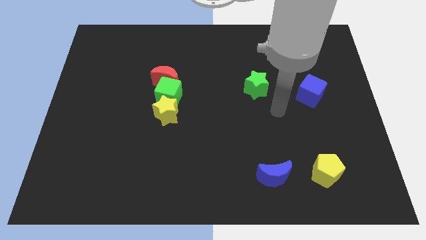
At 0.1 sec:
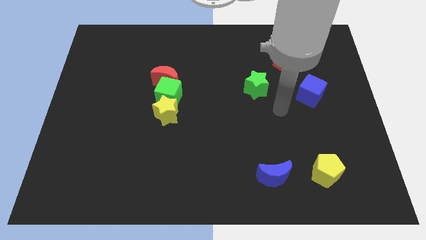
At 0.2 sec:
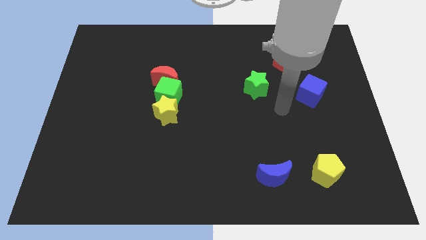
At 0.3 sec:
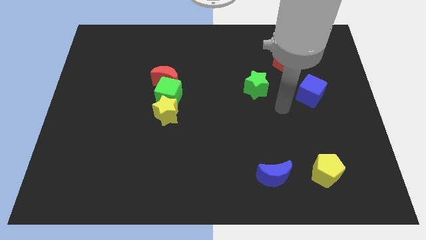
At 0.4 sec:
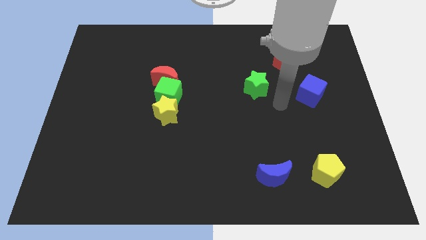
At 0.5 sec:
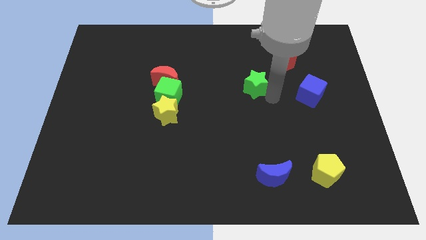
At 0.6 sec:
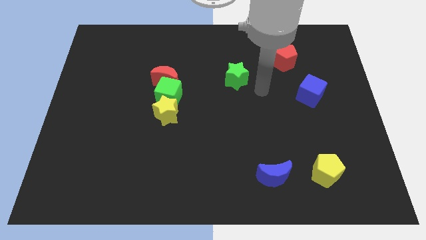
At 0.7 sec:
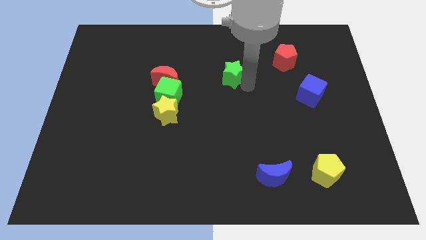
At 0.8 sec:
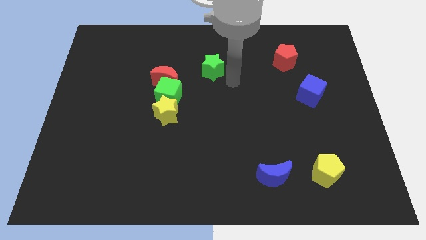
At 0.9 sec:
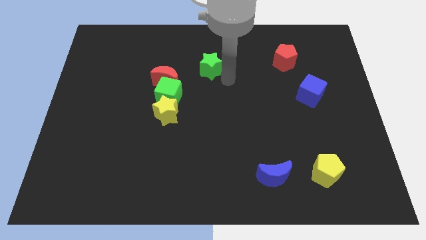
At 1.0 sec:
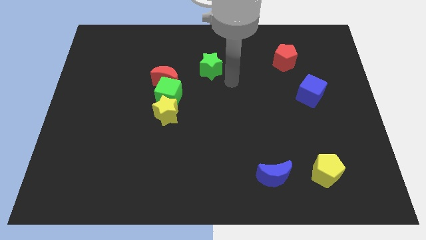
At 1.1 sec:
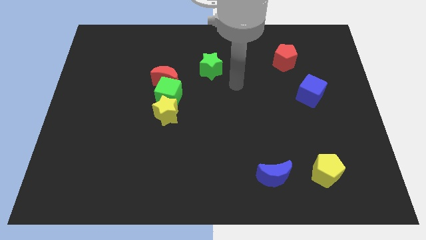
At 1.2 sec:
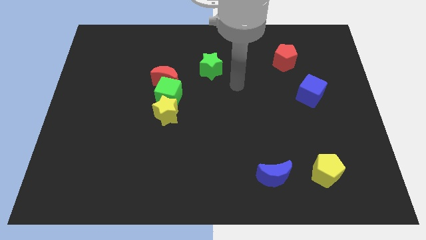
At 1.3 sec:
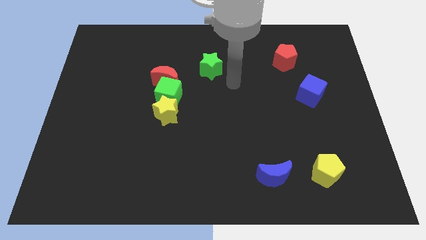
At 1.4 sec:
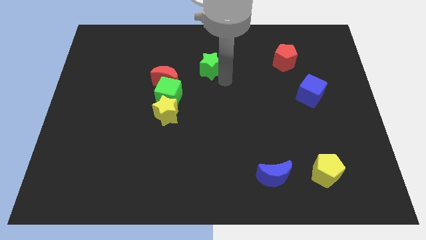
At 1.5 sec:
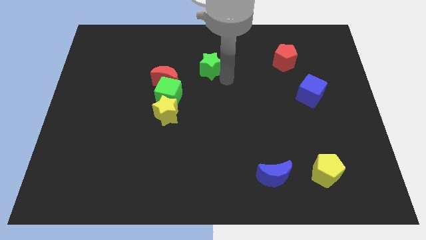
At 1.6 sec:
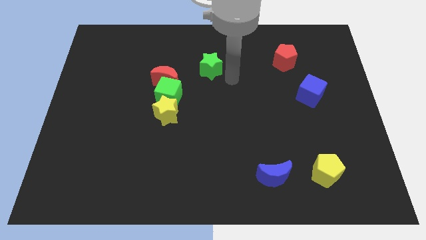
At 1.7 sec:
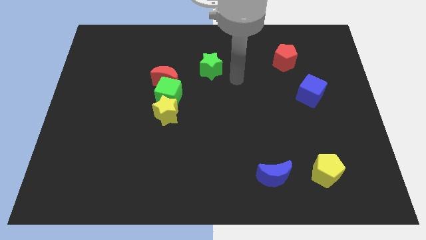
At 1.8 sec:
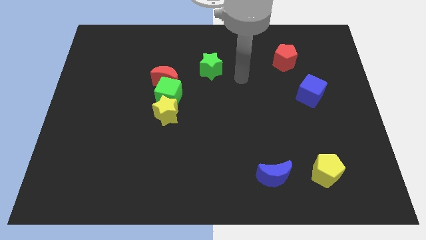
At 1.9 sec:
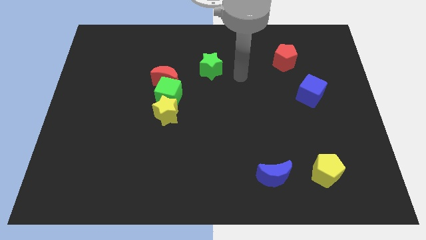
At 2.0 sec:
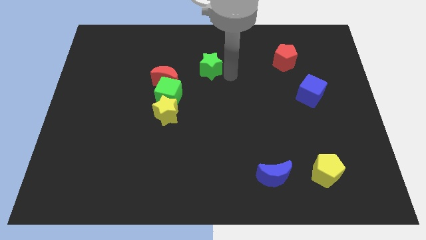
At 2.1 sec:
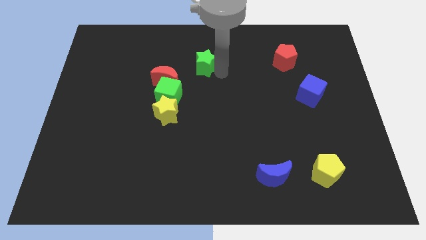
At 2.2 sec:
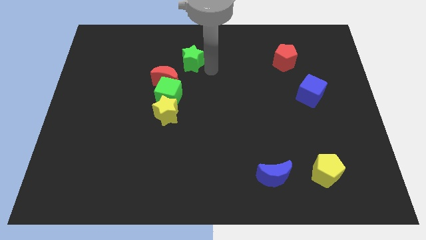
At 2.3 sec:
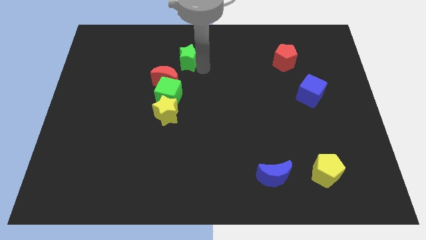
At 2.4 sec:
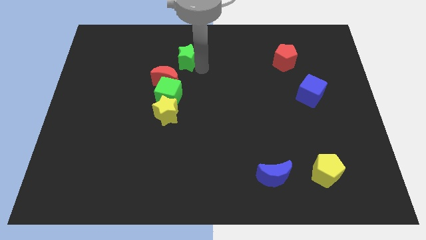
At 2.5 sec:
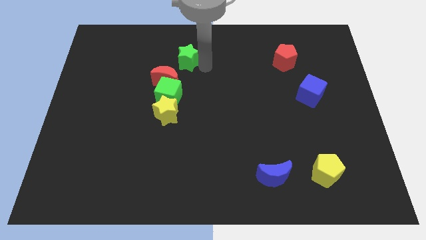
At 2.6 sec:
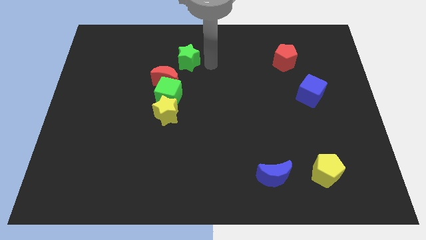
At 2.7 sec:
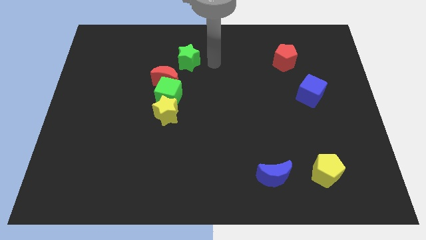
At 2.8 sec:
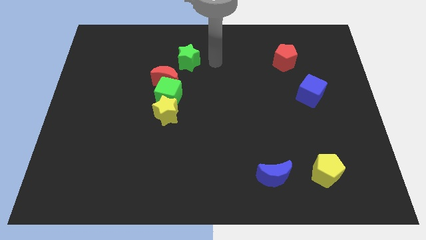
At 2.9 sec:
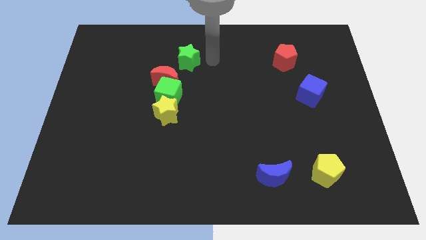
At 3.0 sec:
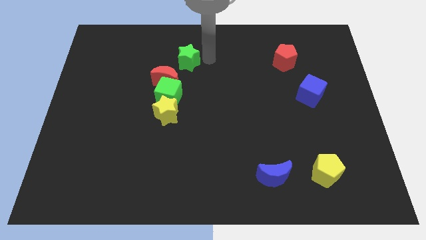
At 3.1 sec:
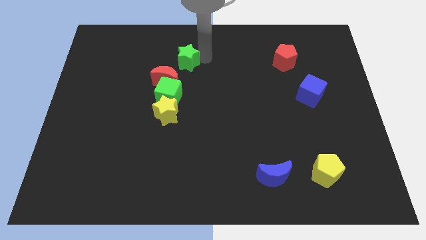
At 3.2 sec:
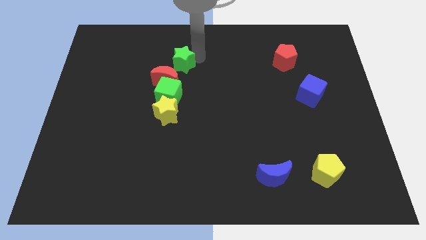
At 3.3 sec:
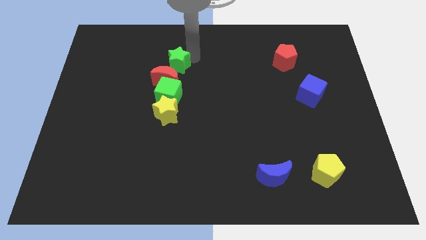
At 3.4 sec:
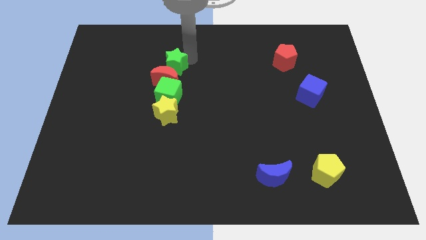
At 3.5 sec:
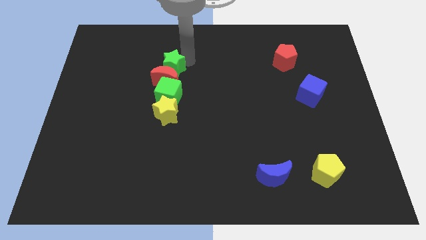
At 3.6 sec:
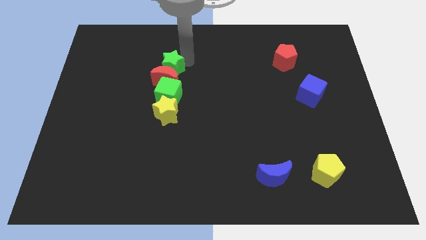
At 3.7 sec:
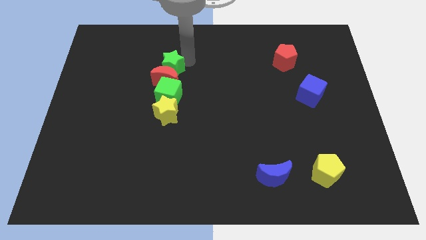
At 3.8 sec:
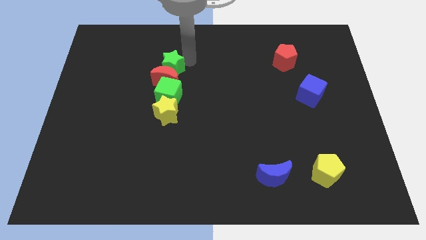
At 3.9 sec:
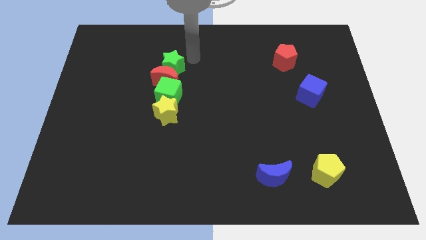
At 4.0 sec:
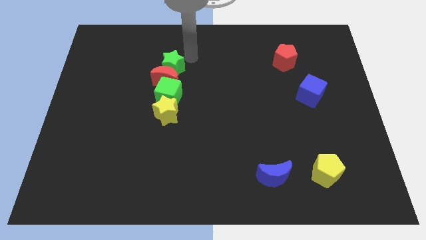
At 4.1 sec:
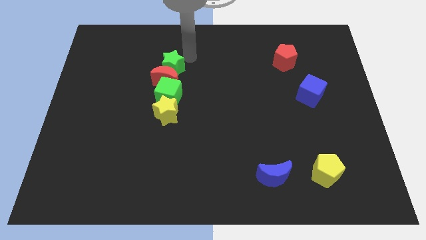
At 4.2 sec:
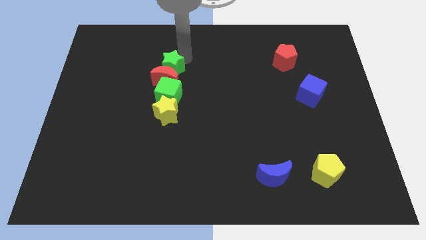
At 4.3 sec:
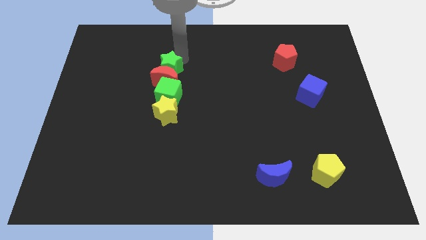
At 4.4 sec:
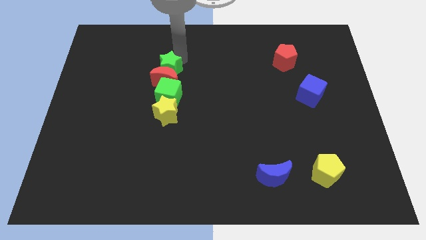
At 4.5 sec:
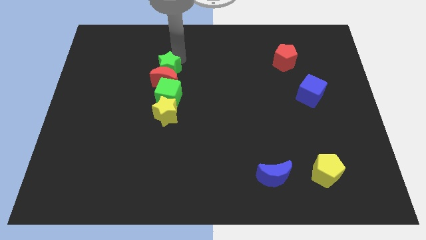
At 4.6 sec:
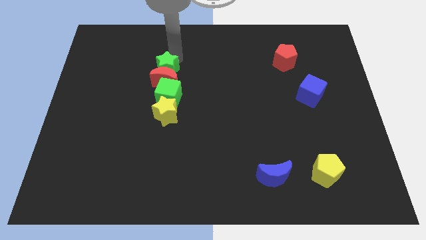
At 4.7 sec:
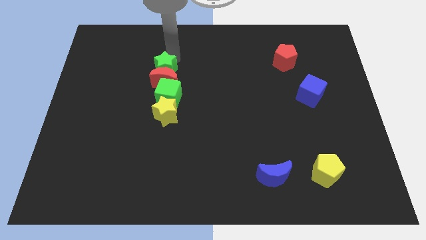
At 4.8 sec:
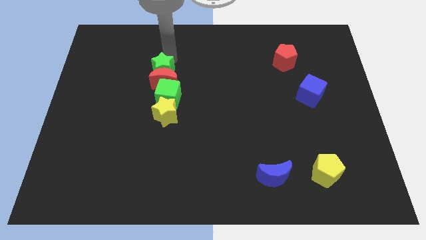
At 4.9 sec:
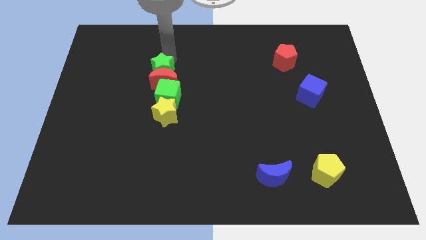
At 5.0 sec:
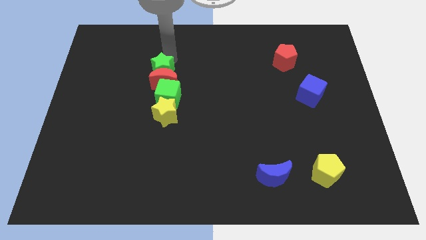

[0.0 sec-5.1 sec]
place the green star into the red crescent

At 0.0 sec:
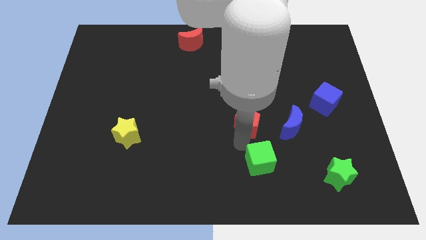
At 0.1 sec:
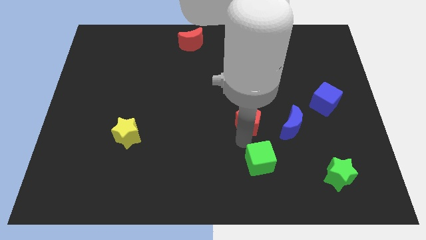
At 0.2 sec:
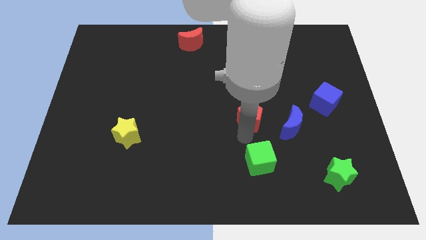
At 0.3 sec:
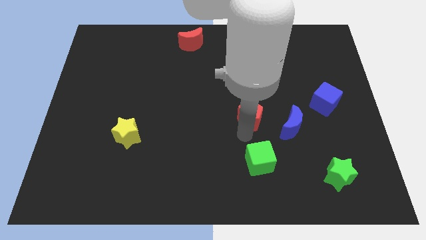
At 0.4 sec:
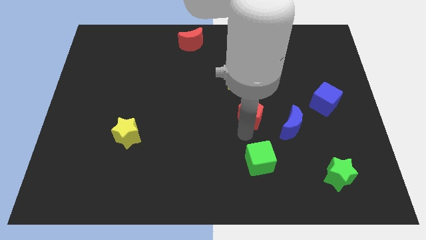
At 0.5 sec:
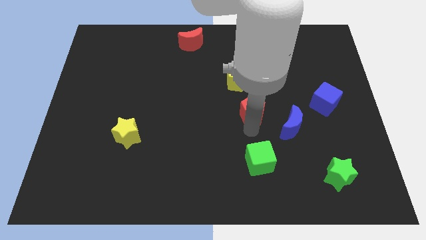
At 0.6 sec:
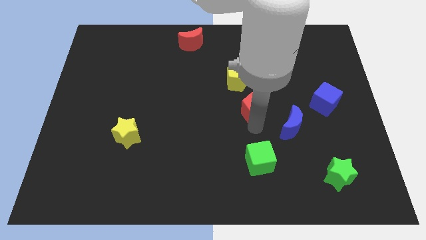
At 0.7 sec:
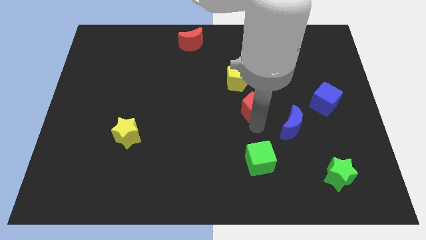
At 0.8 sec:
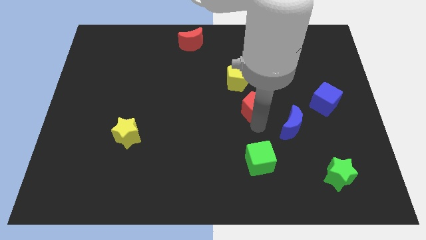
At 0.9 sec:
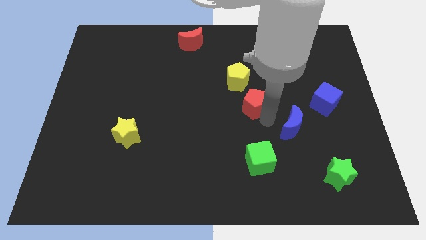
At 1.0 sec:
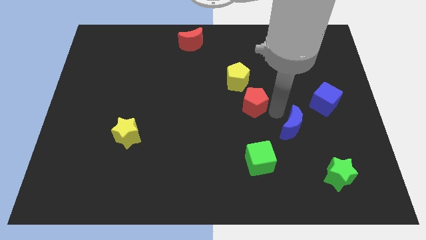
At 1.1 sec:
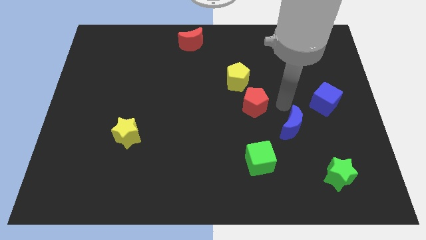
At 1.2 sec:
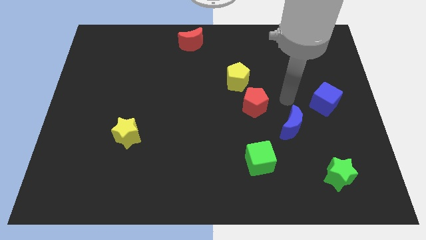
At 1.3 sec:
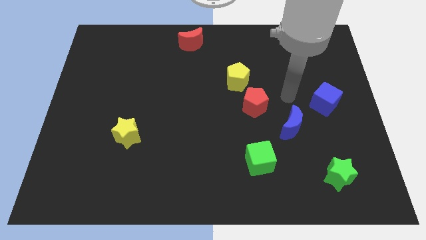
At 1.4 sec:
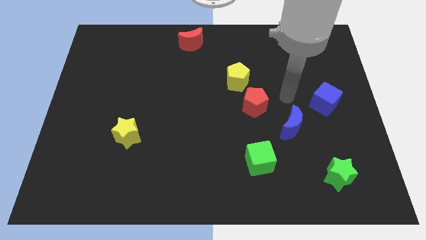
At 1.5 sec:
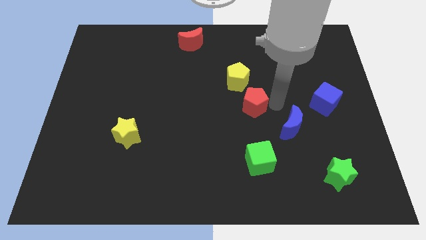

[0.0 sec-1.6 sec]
place red pentagon to the bottom right of the yellow pentagon

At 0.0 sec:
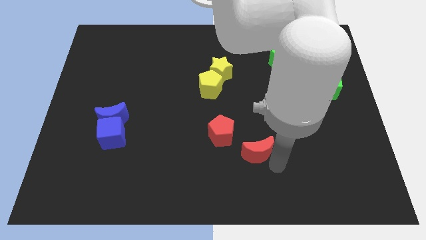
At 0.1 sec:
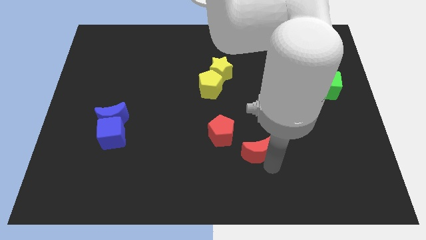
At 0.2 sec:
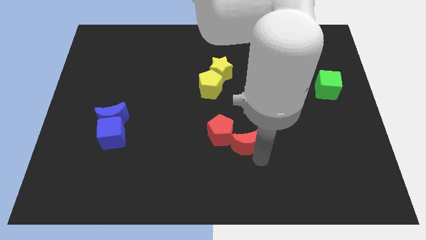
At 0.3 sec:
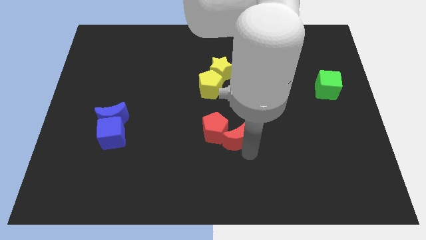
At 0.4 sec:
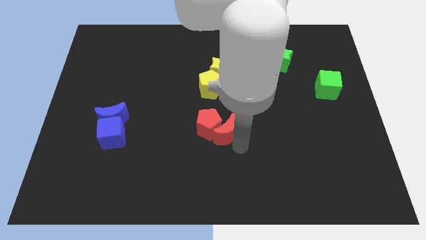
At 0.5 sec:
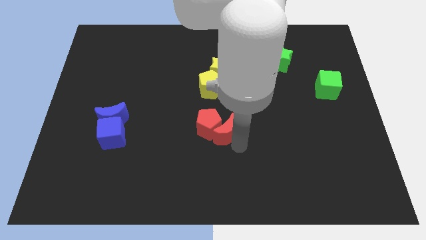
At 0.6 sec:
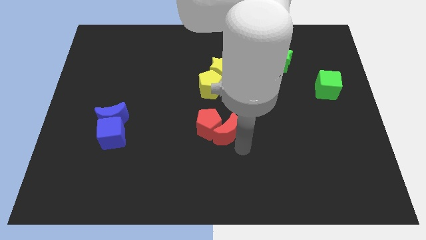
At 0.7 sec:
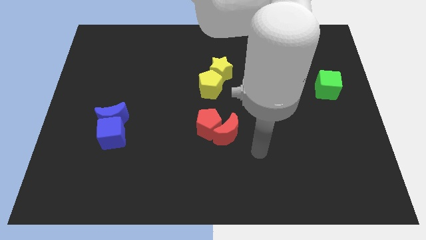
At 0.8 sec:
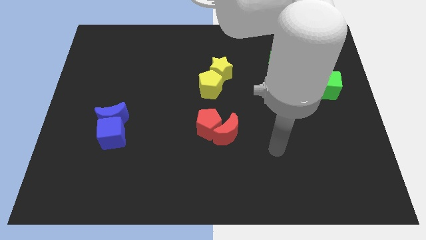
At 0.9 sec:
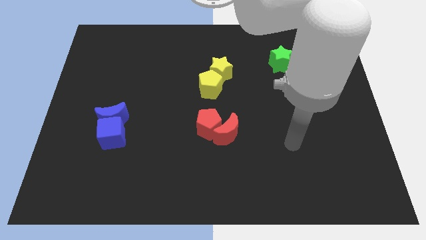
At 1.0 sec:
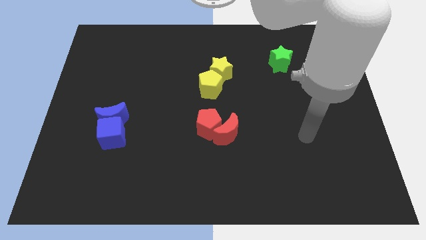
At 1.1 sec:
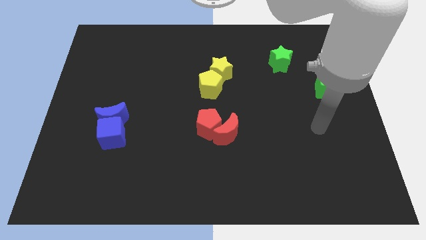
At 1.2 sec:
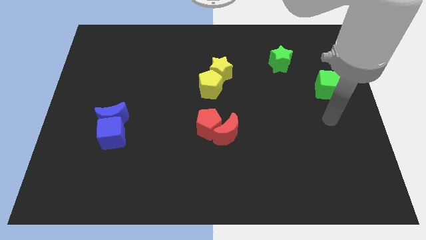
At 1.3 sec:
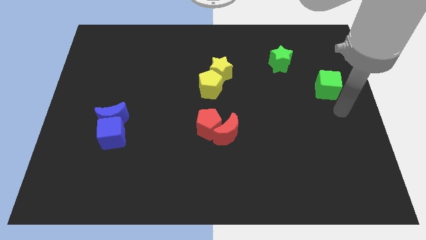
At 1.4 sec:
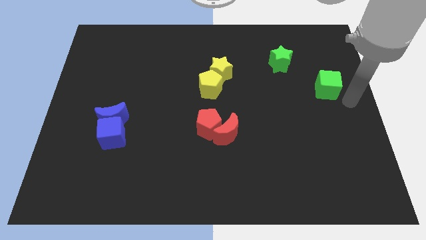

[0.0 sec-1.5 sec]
move red pentagon and red moon to the bottom side of yellow pentagon and yellow star

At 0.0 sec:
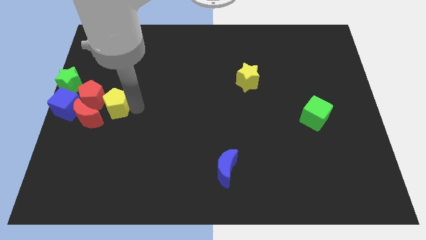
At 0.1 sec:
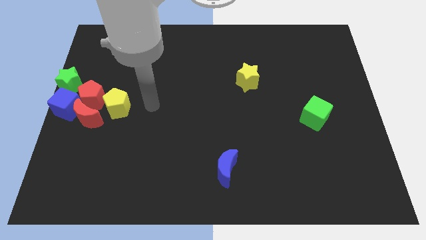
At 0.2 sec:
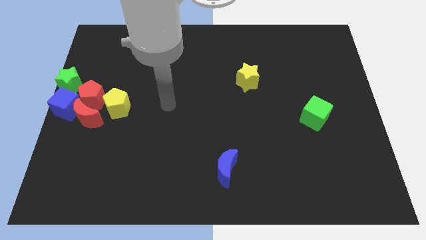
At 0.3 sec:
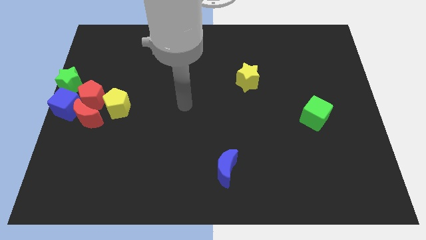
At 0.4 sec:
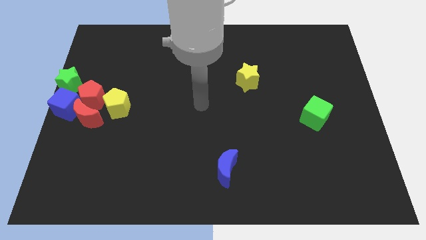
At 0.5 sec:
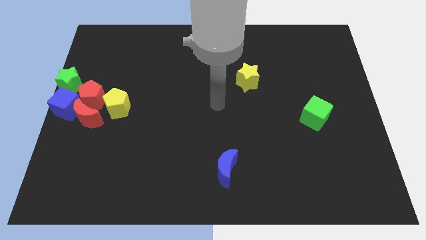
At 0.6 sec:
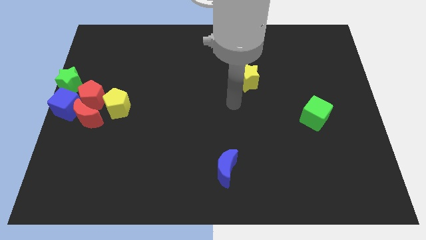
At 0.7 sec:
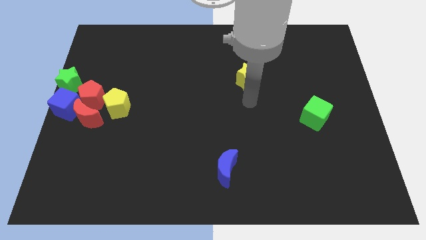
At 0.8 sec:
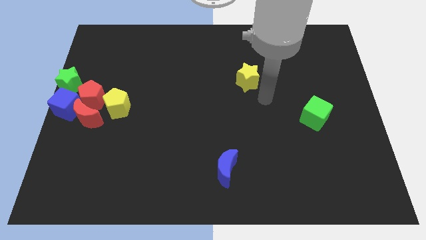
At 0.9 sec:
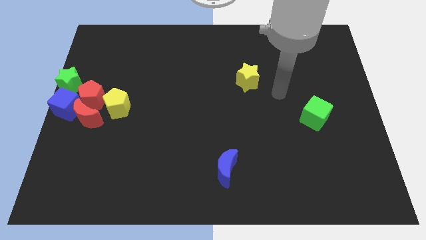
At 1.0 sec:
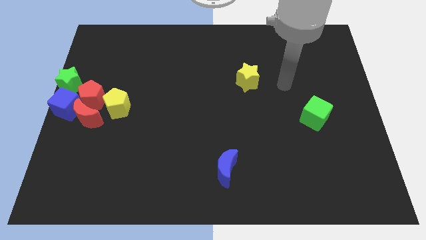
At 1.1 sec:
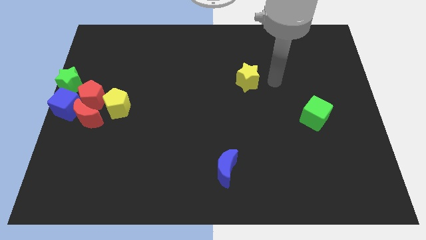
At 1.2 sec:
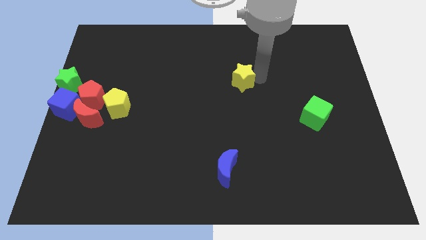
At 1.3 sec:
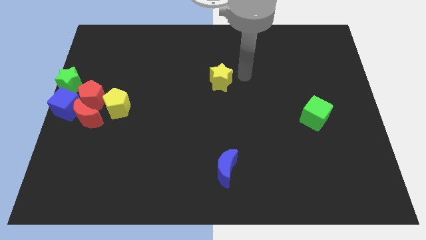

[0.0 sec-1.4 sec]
place your arm to the right of yellow star
